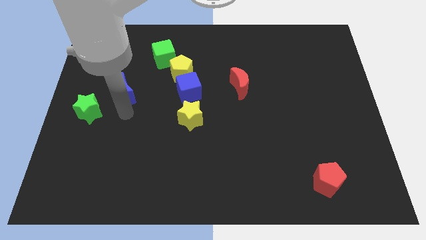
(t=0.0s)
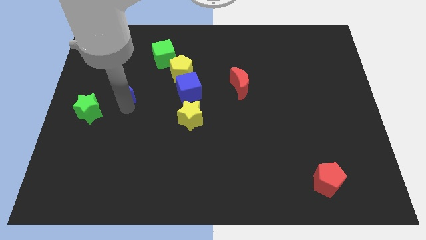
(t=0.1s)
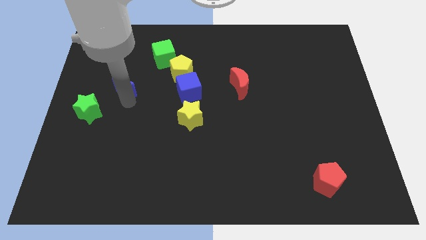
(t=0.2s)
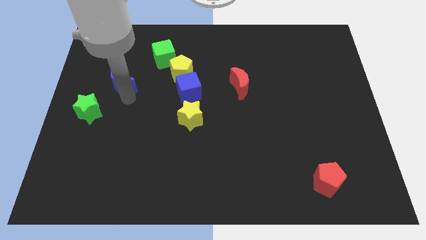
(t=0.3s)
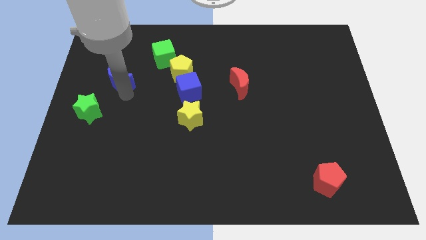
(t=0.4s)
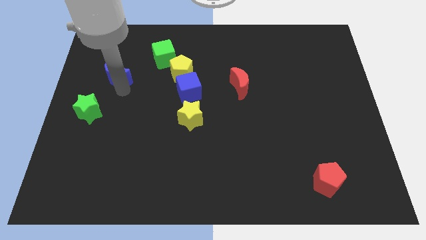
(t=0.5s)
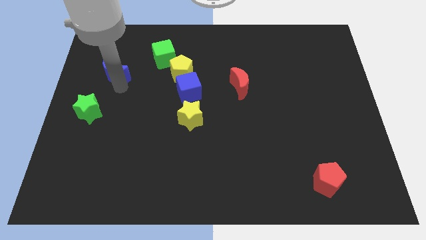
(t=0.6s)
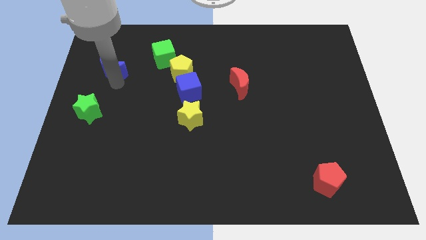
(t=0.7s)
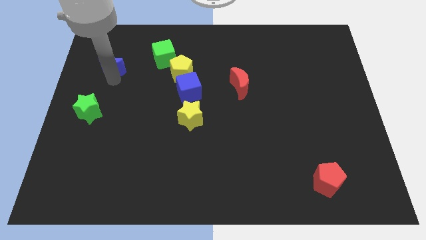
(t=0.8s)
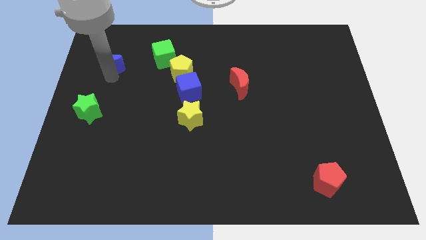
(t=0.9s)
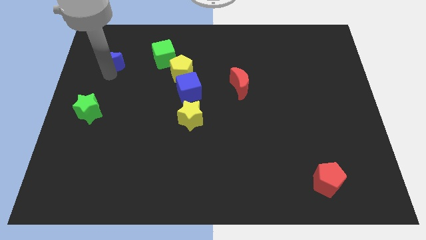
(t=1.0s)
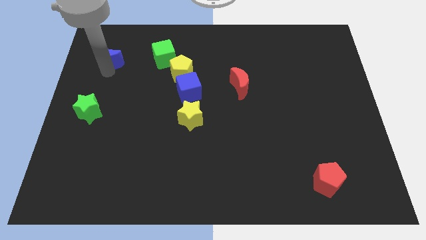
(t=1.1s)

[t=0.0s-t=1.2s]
place the blue crescent at left side of the green cube

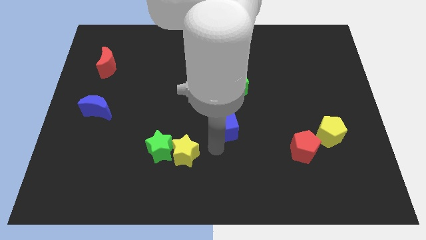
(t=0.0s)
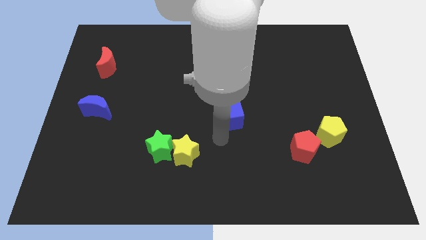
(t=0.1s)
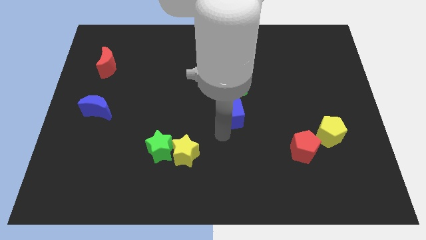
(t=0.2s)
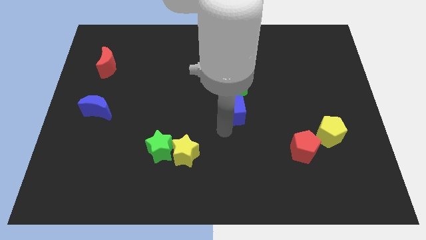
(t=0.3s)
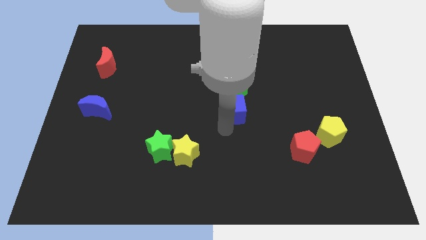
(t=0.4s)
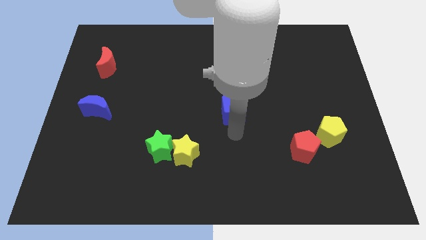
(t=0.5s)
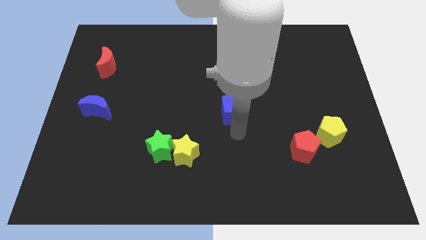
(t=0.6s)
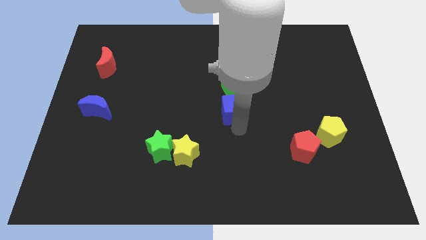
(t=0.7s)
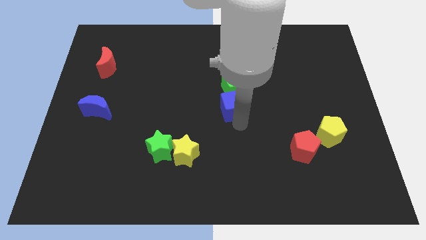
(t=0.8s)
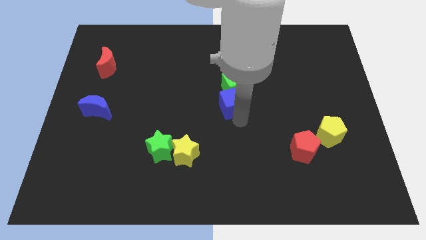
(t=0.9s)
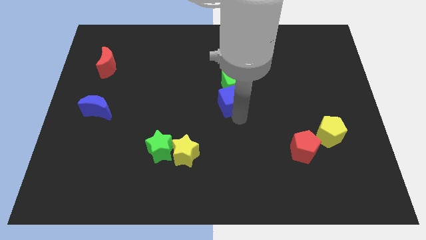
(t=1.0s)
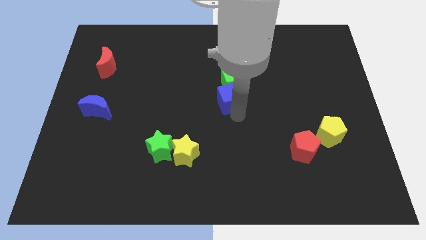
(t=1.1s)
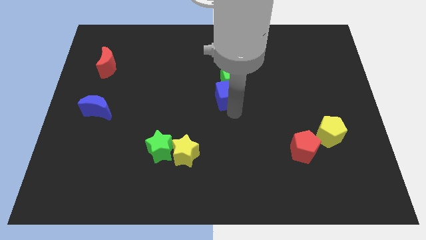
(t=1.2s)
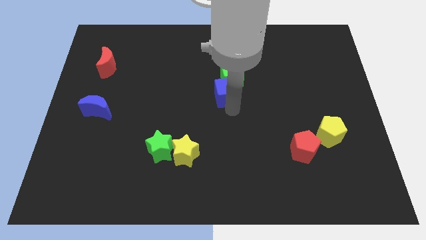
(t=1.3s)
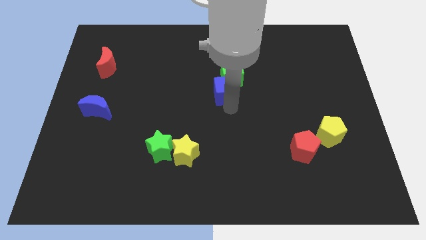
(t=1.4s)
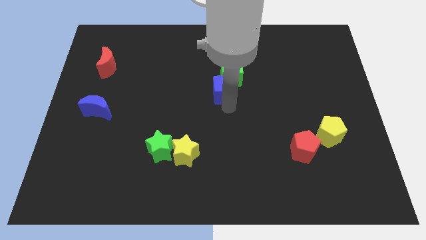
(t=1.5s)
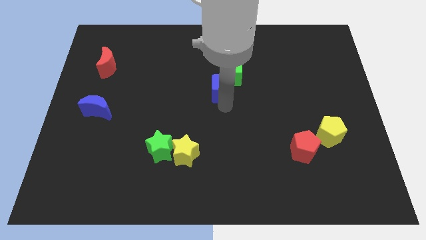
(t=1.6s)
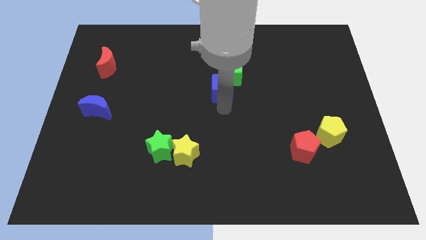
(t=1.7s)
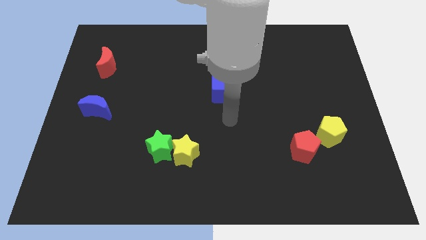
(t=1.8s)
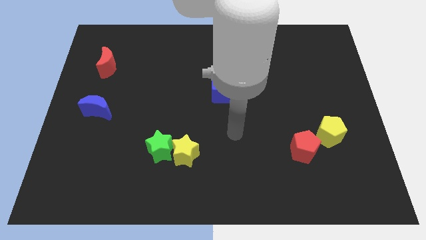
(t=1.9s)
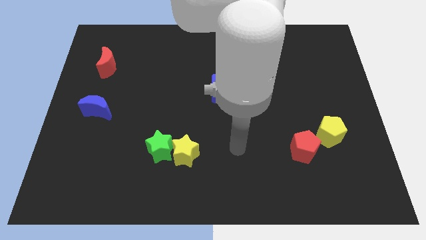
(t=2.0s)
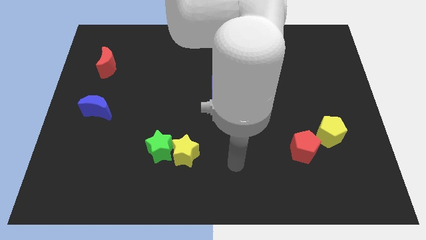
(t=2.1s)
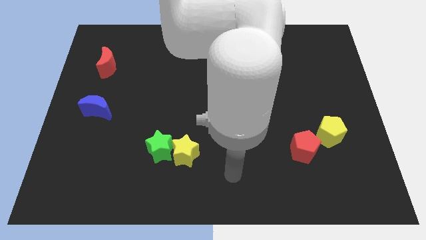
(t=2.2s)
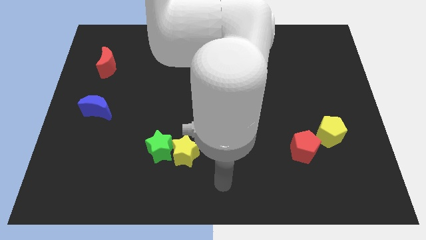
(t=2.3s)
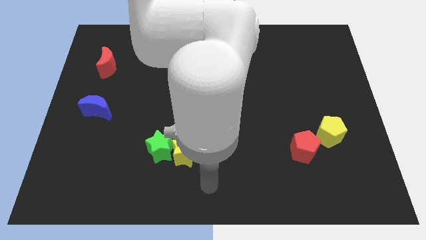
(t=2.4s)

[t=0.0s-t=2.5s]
place your arm at the bottom center of the board

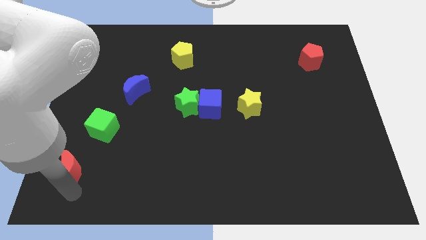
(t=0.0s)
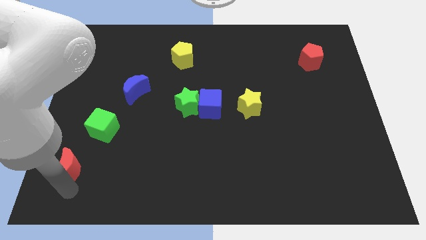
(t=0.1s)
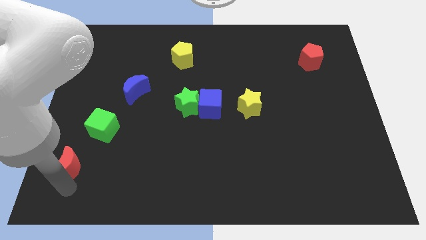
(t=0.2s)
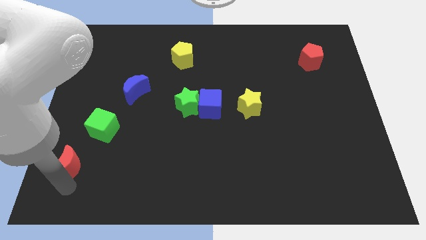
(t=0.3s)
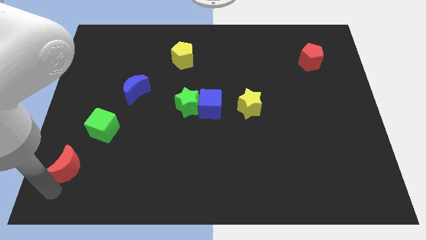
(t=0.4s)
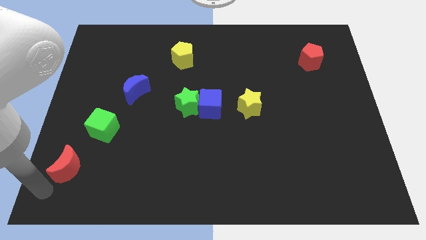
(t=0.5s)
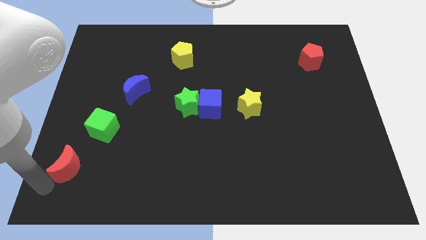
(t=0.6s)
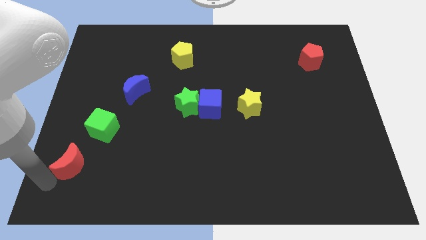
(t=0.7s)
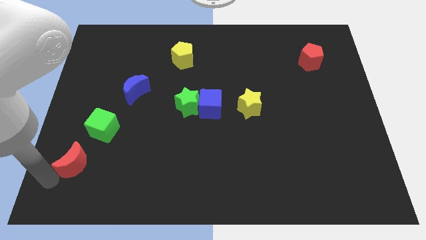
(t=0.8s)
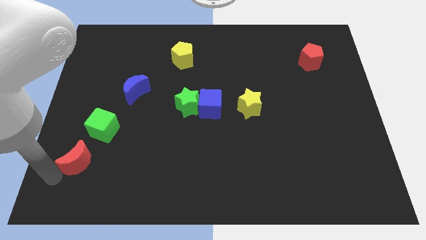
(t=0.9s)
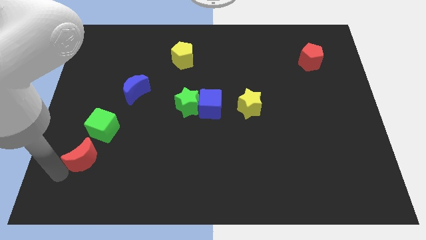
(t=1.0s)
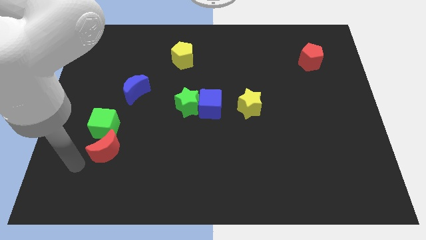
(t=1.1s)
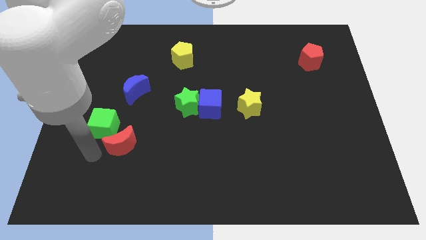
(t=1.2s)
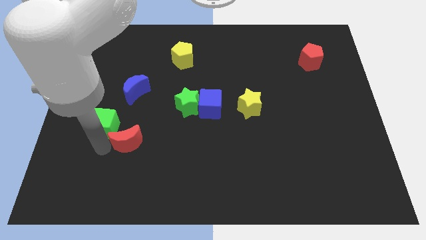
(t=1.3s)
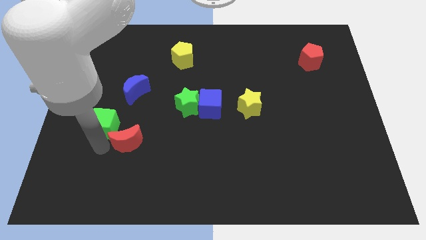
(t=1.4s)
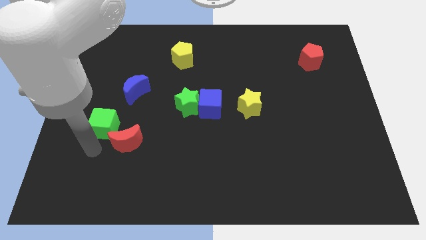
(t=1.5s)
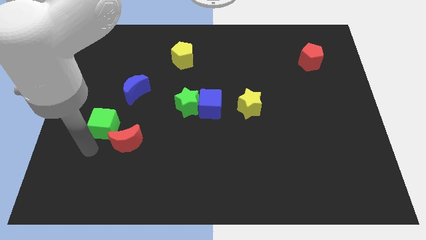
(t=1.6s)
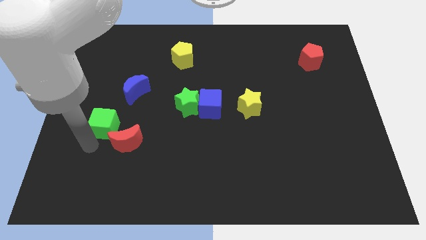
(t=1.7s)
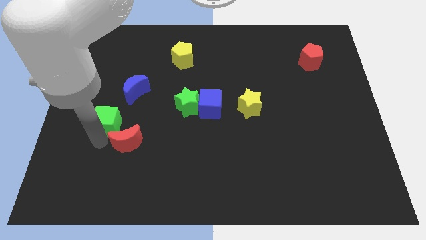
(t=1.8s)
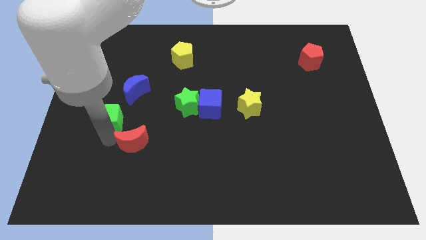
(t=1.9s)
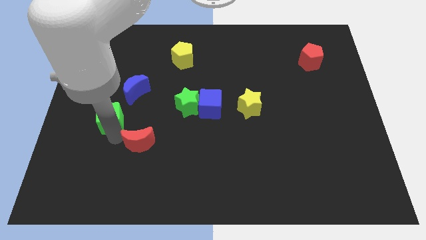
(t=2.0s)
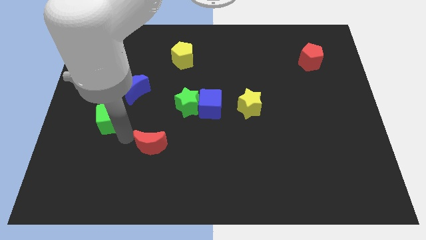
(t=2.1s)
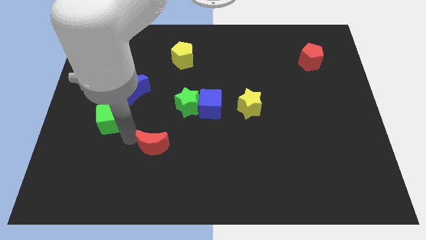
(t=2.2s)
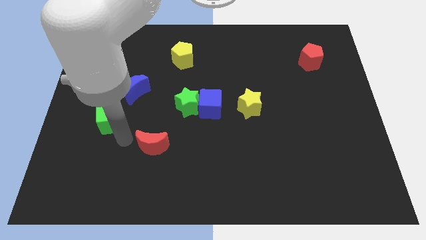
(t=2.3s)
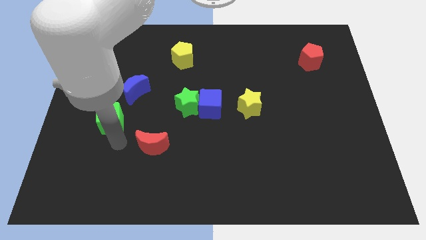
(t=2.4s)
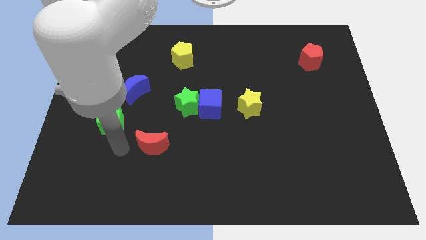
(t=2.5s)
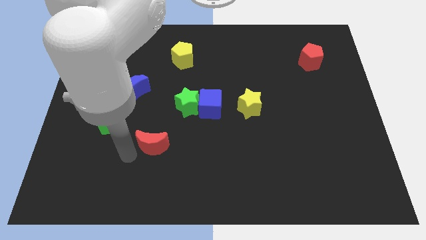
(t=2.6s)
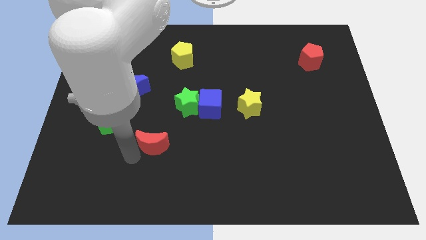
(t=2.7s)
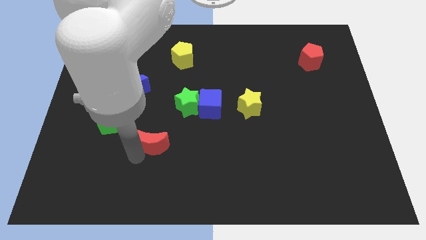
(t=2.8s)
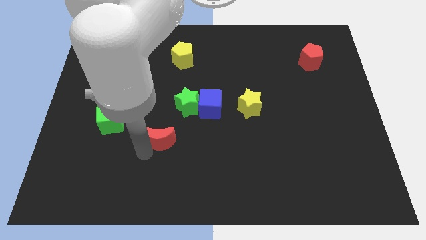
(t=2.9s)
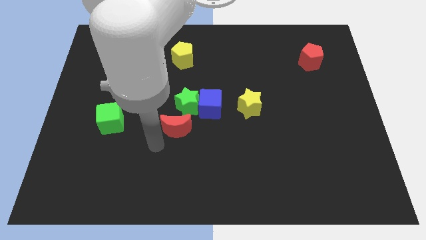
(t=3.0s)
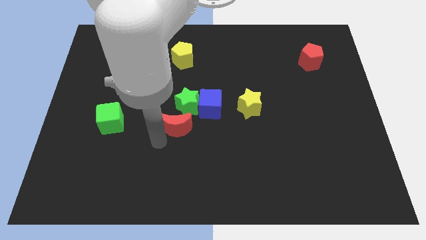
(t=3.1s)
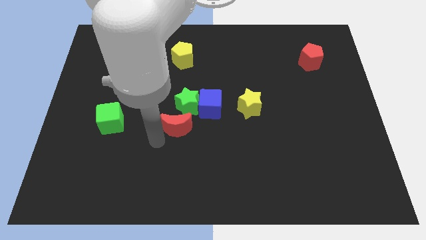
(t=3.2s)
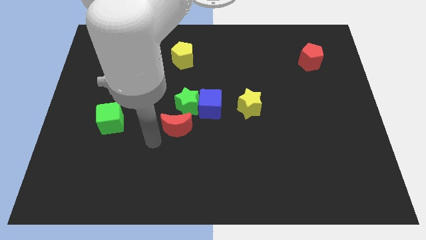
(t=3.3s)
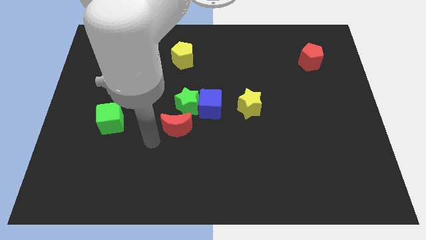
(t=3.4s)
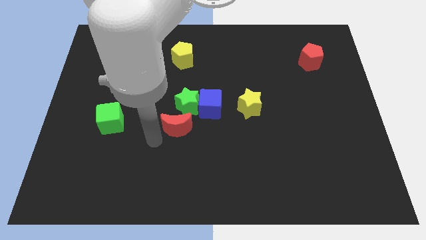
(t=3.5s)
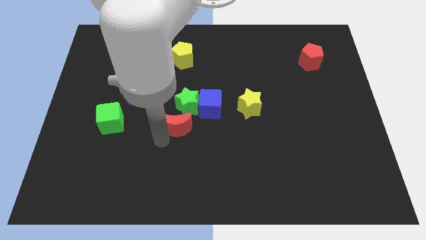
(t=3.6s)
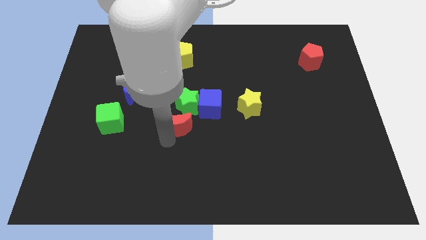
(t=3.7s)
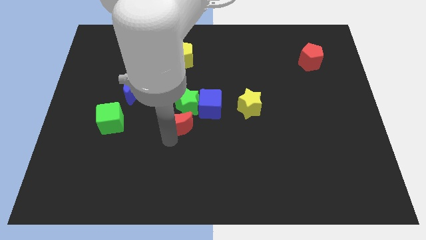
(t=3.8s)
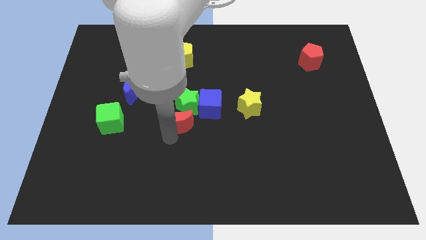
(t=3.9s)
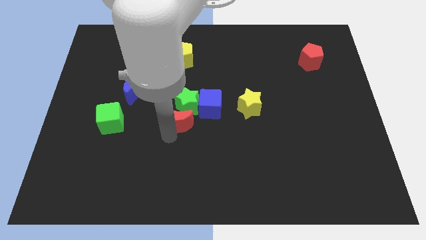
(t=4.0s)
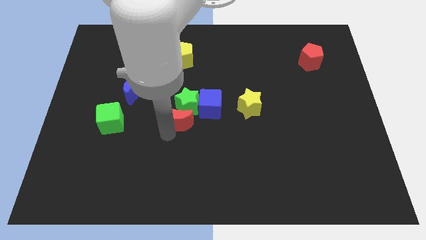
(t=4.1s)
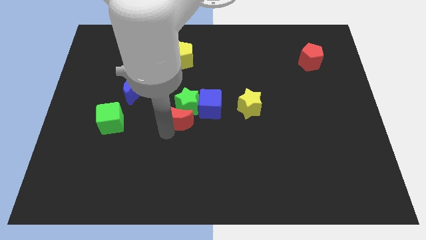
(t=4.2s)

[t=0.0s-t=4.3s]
move the red moon to the bottom side of the green star

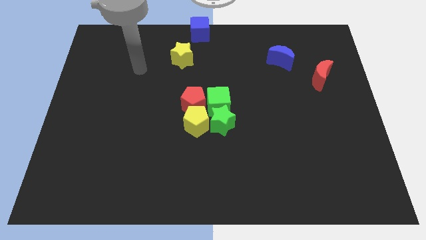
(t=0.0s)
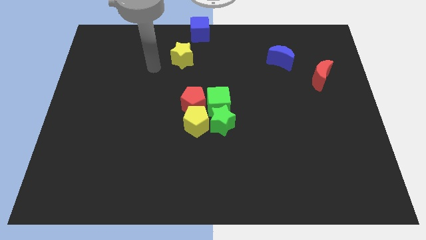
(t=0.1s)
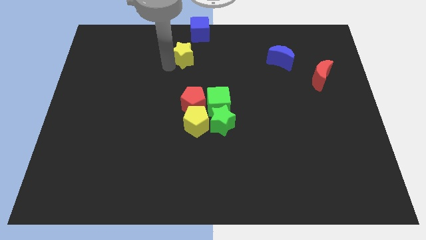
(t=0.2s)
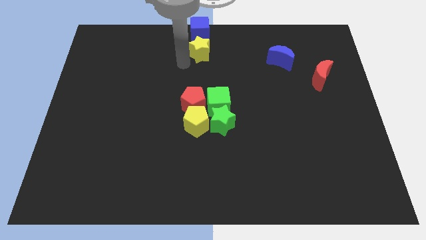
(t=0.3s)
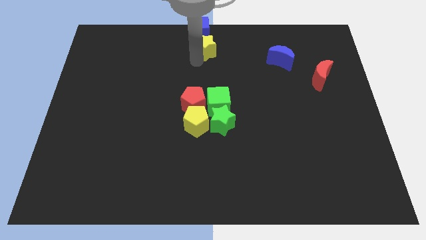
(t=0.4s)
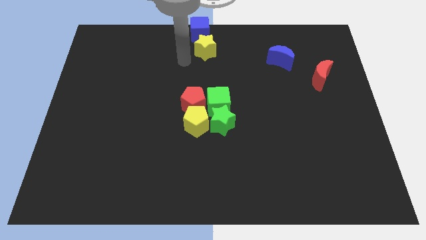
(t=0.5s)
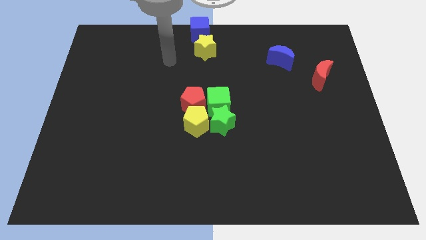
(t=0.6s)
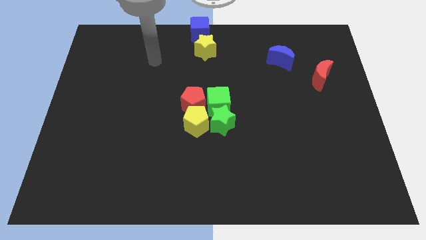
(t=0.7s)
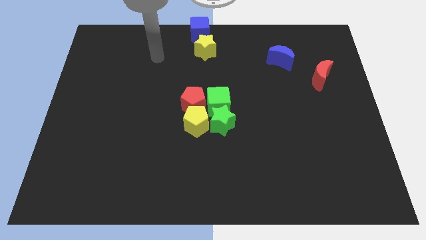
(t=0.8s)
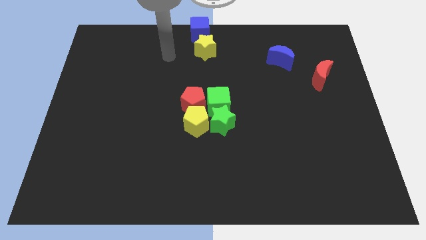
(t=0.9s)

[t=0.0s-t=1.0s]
place the yellow star below the blue cube
